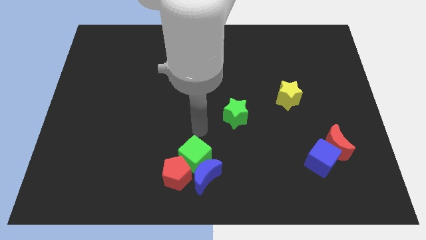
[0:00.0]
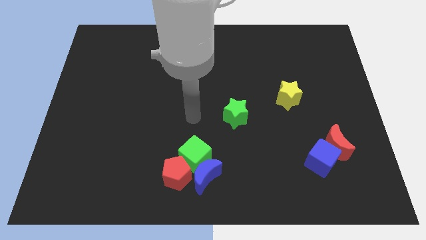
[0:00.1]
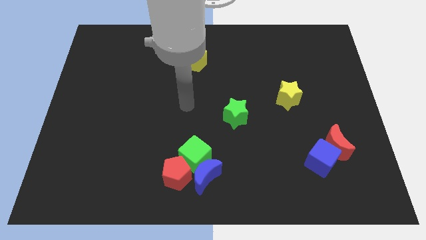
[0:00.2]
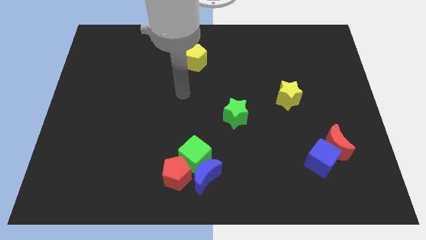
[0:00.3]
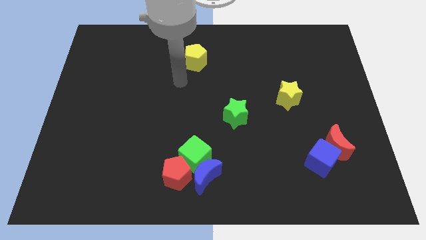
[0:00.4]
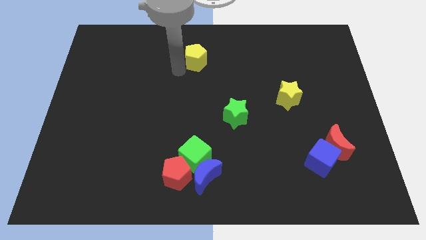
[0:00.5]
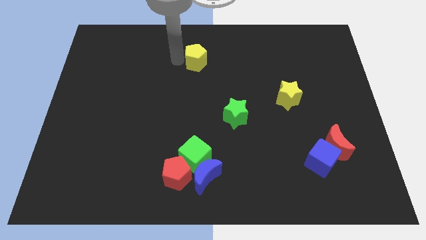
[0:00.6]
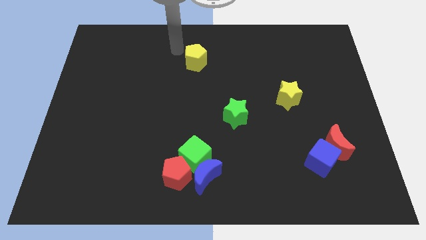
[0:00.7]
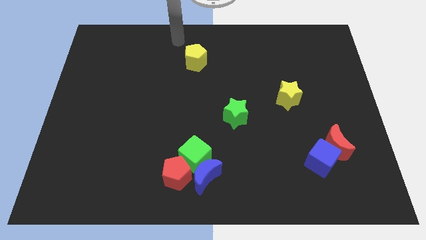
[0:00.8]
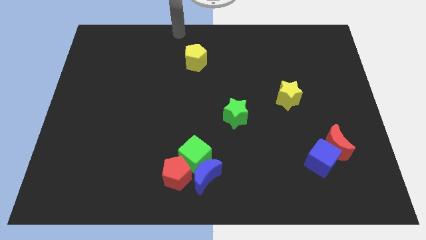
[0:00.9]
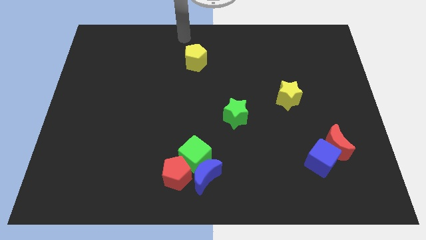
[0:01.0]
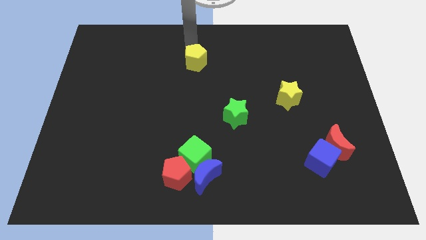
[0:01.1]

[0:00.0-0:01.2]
move your arm towards yellow pentagon

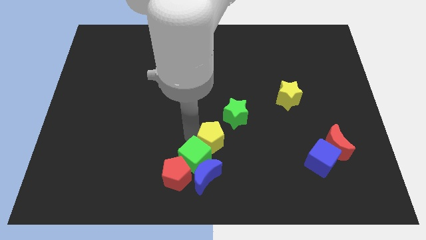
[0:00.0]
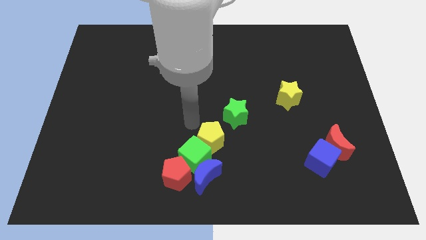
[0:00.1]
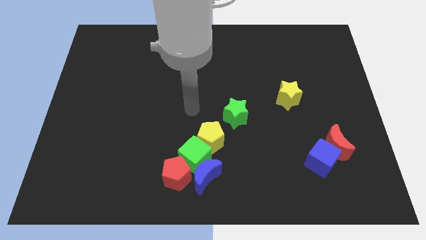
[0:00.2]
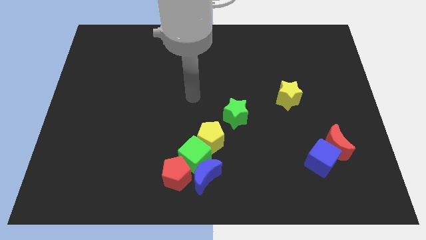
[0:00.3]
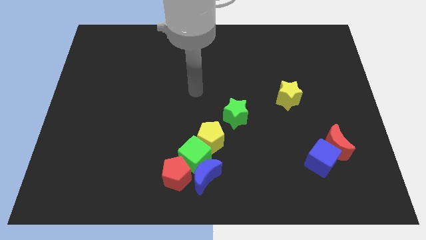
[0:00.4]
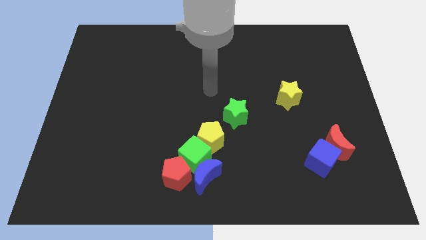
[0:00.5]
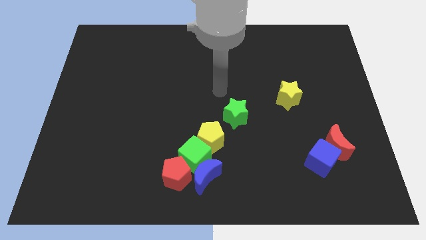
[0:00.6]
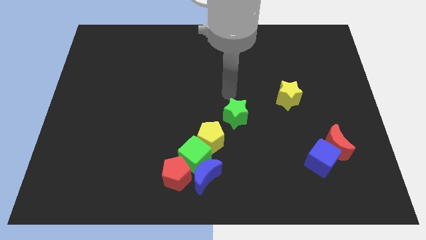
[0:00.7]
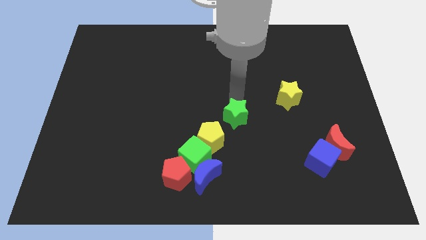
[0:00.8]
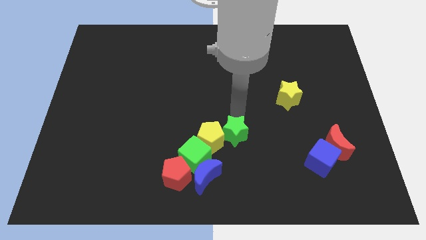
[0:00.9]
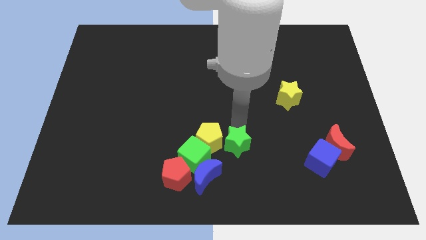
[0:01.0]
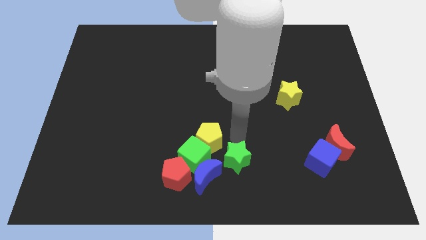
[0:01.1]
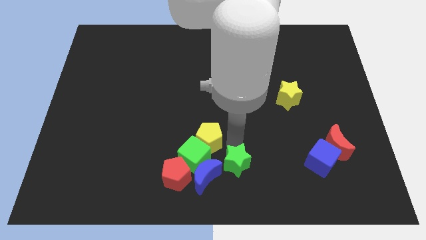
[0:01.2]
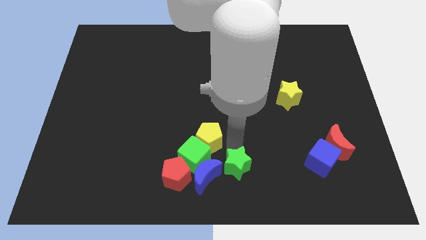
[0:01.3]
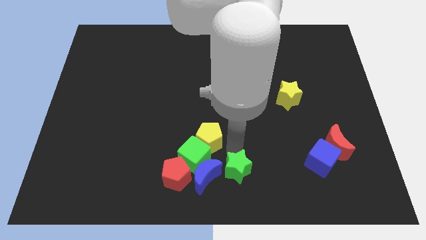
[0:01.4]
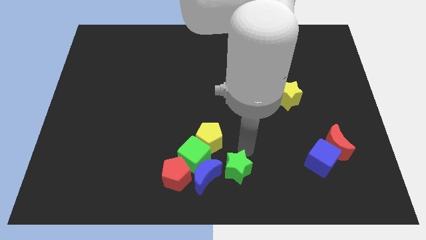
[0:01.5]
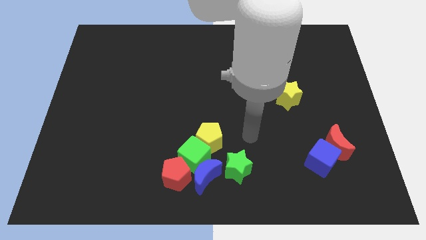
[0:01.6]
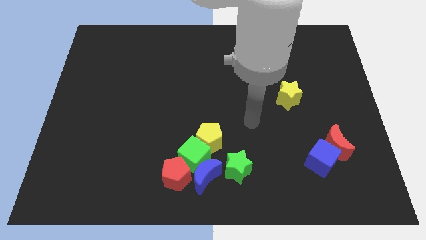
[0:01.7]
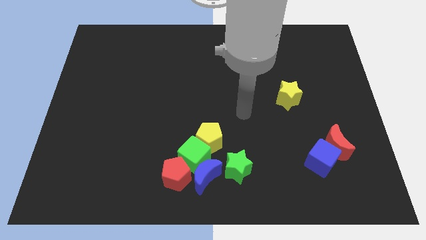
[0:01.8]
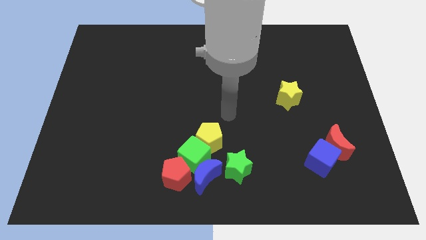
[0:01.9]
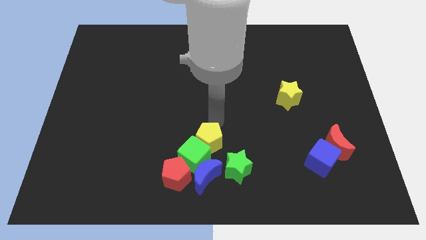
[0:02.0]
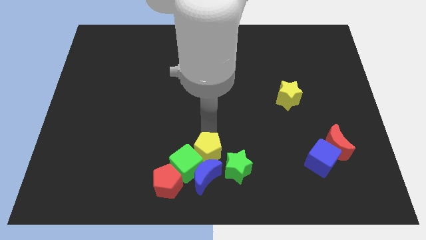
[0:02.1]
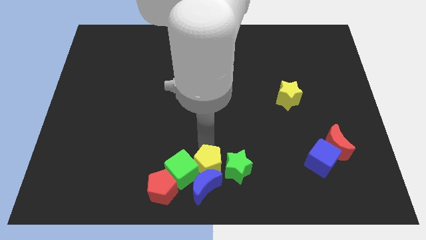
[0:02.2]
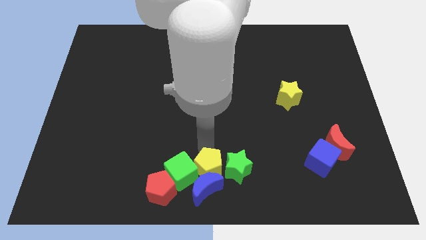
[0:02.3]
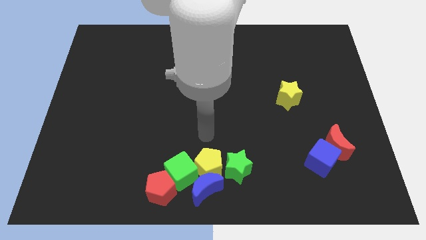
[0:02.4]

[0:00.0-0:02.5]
place green star to the right of the blue moon

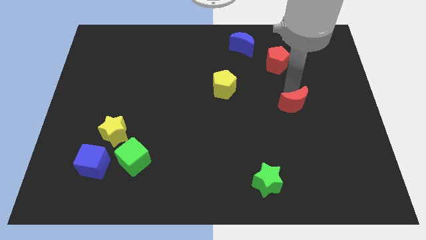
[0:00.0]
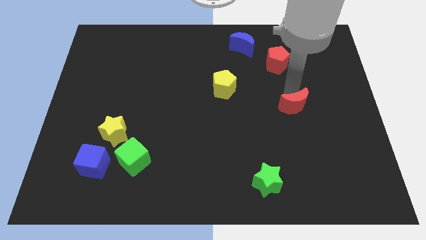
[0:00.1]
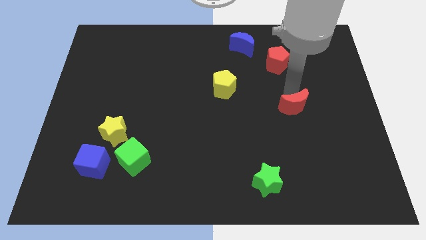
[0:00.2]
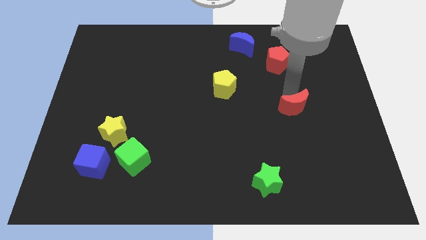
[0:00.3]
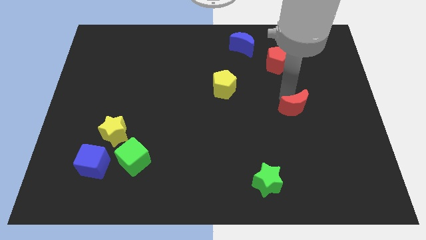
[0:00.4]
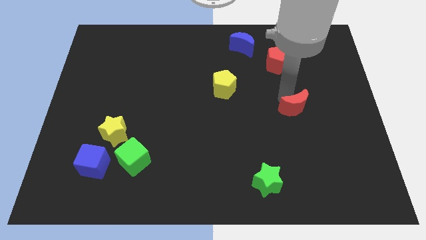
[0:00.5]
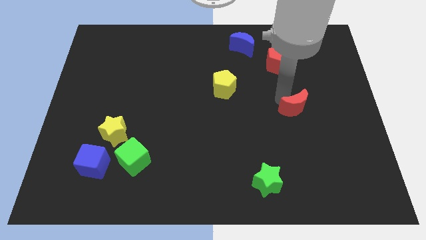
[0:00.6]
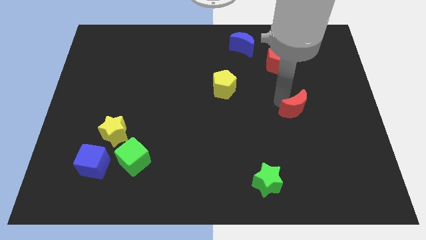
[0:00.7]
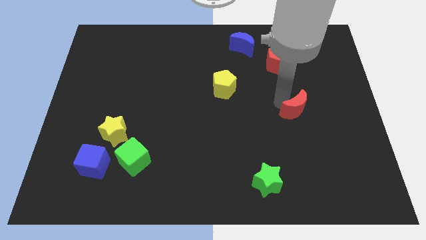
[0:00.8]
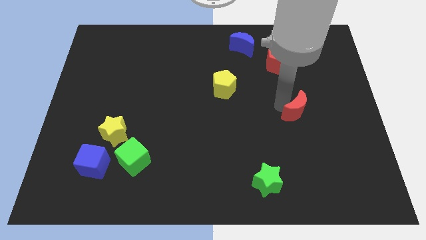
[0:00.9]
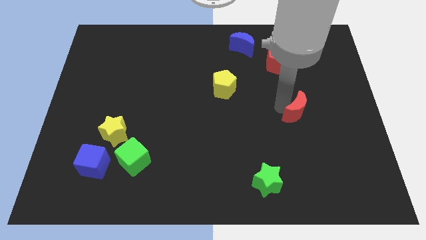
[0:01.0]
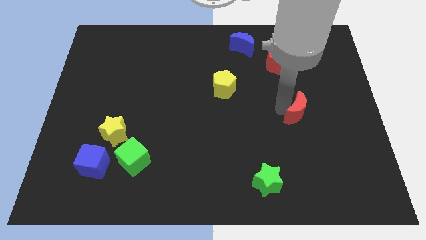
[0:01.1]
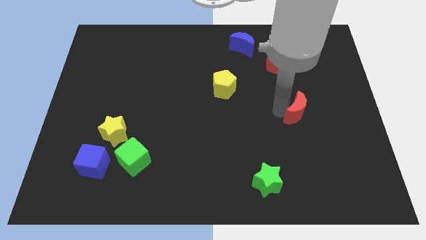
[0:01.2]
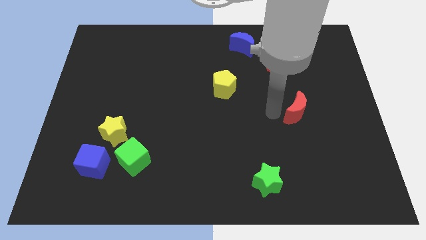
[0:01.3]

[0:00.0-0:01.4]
slide the blue crescent down slightly

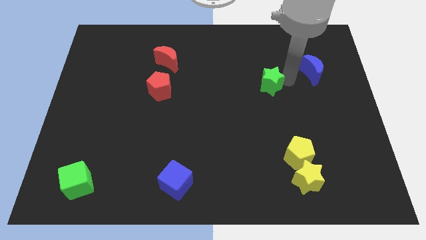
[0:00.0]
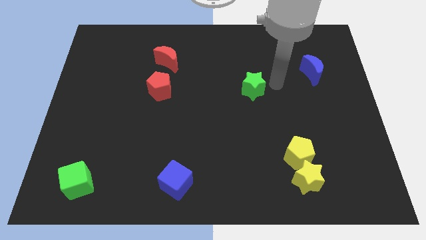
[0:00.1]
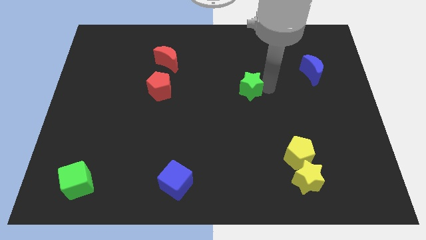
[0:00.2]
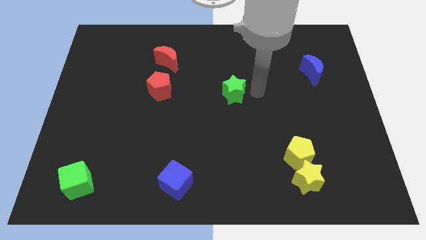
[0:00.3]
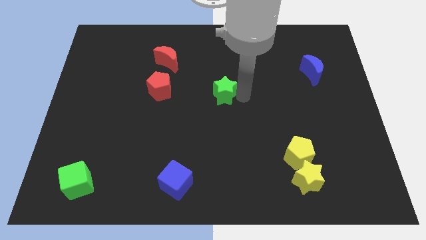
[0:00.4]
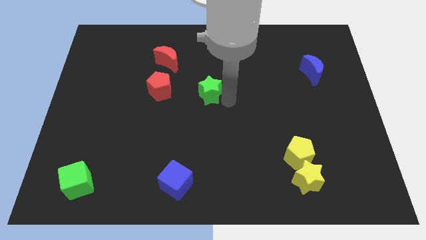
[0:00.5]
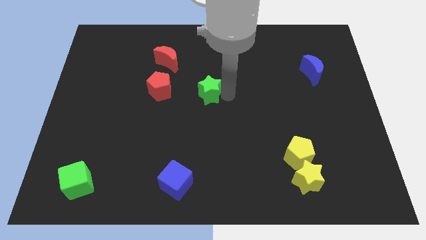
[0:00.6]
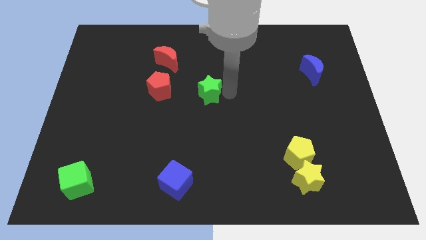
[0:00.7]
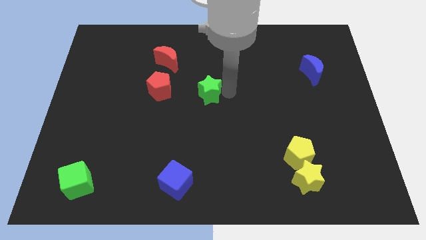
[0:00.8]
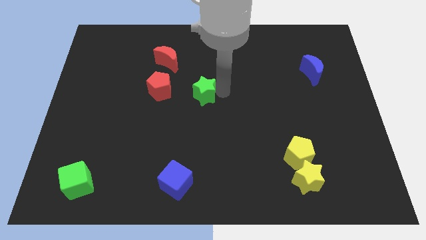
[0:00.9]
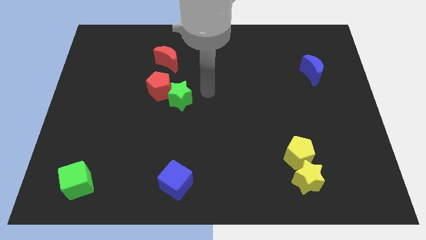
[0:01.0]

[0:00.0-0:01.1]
push green star in to red pentagon

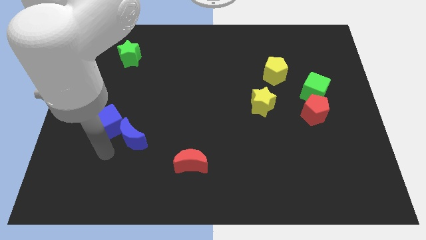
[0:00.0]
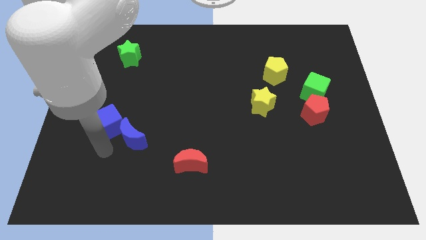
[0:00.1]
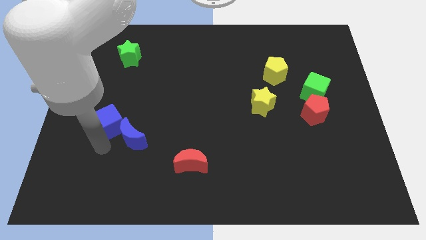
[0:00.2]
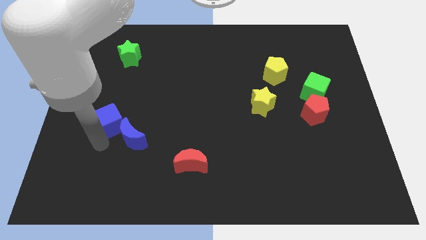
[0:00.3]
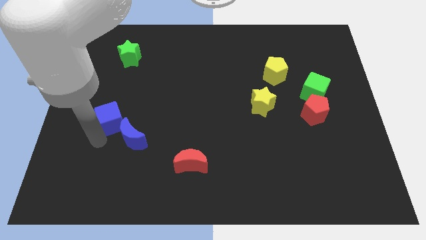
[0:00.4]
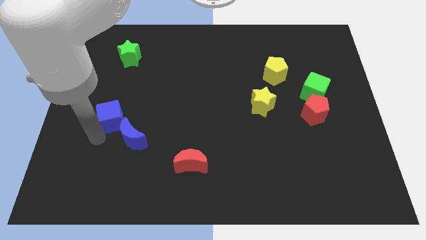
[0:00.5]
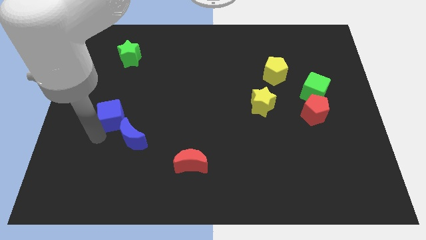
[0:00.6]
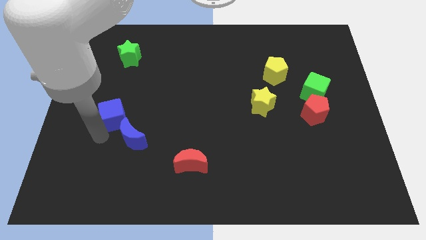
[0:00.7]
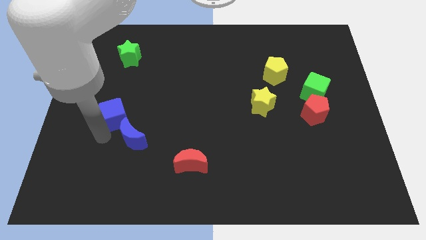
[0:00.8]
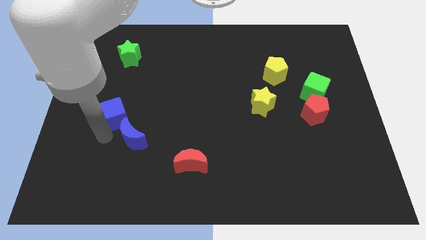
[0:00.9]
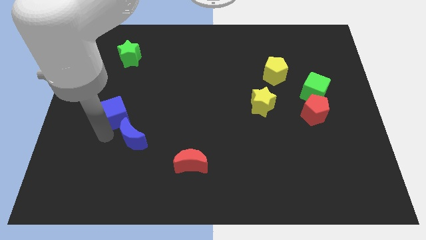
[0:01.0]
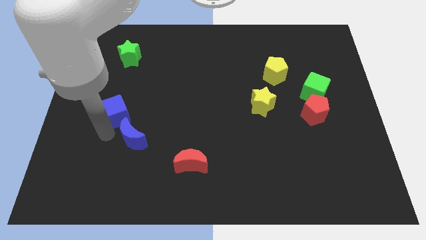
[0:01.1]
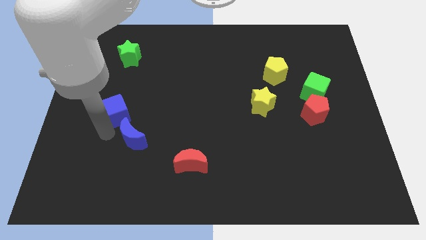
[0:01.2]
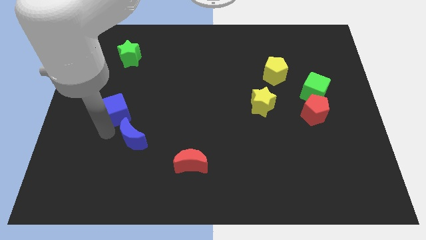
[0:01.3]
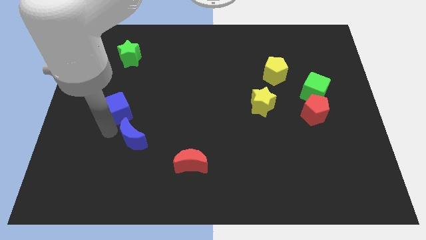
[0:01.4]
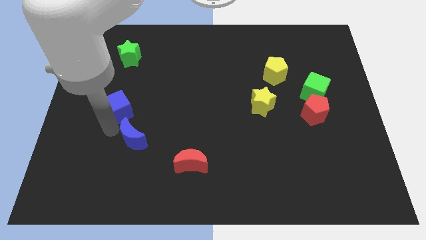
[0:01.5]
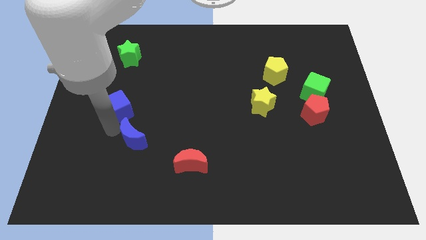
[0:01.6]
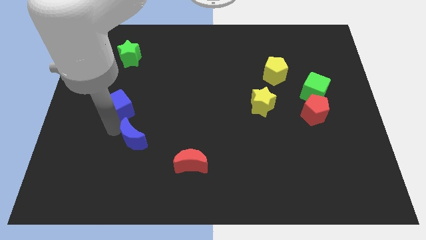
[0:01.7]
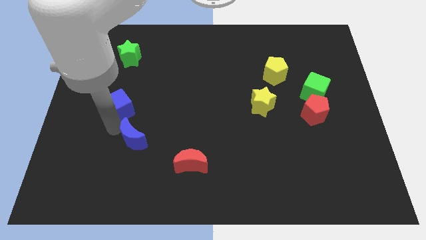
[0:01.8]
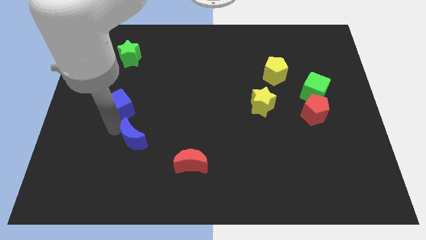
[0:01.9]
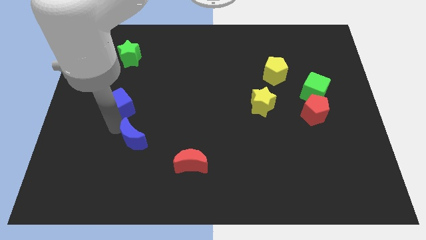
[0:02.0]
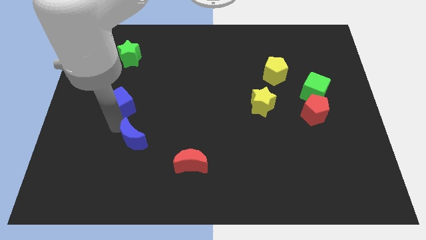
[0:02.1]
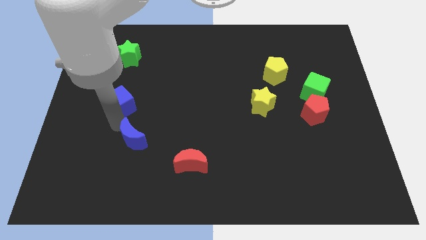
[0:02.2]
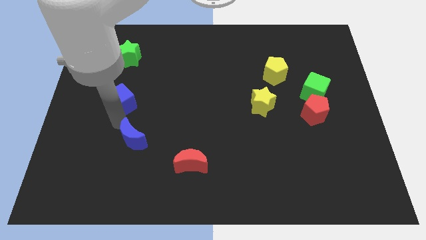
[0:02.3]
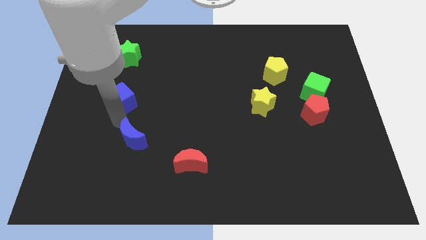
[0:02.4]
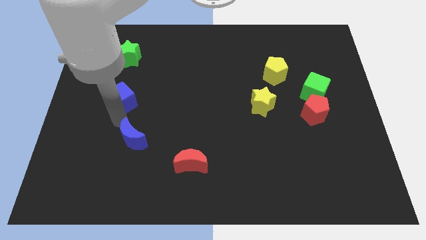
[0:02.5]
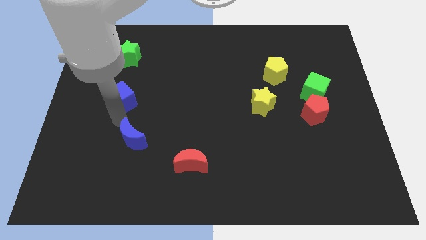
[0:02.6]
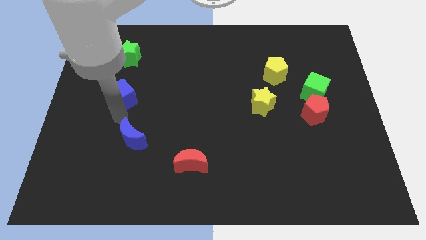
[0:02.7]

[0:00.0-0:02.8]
push blue cube above blue moon
